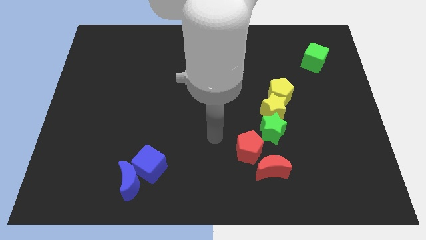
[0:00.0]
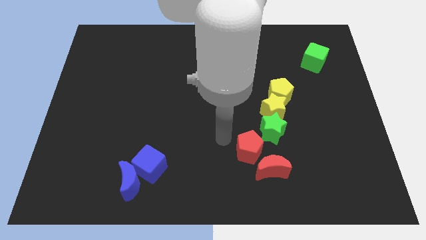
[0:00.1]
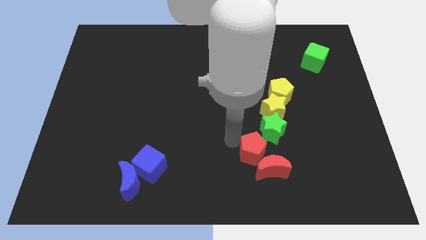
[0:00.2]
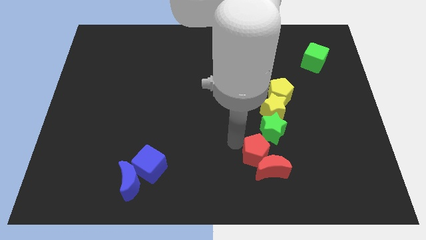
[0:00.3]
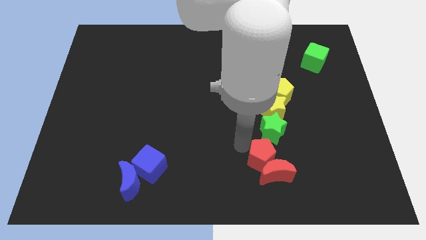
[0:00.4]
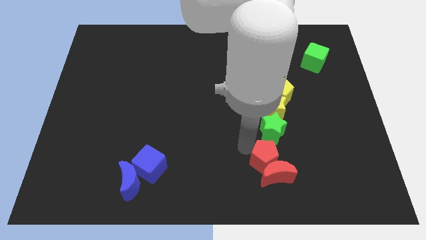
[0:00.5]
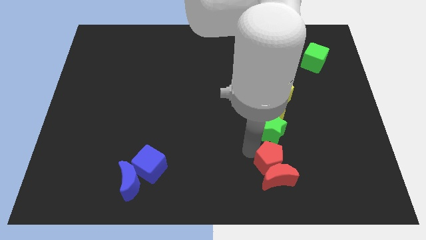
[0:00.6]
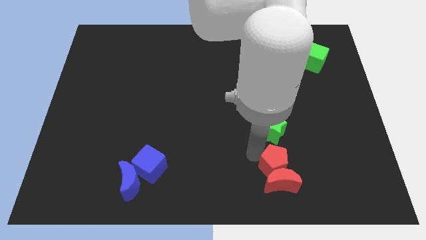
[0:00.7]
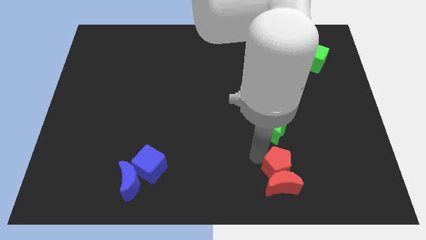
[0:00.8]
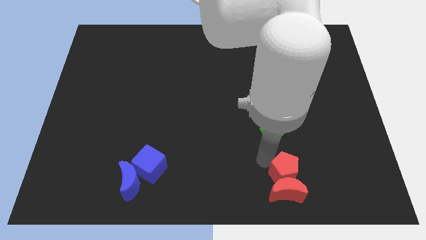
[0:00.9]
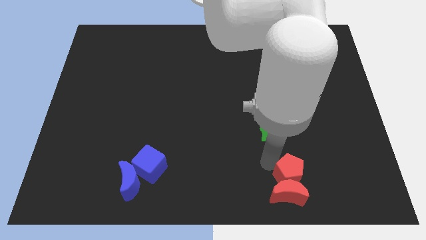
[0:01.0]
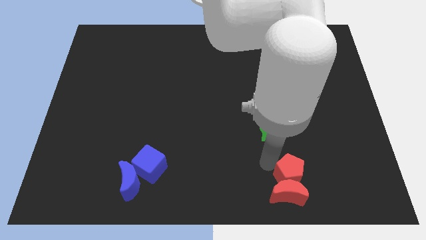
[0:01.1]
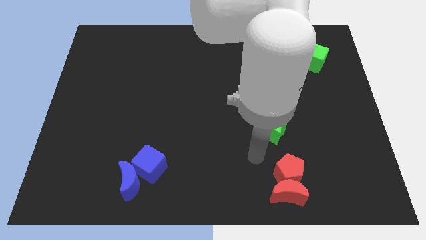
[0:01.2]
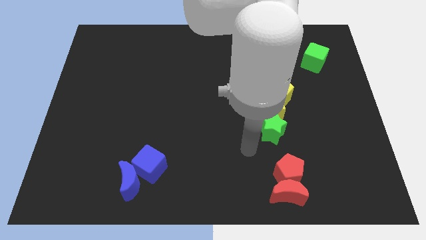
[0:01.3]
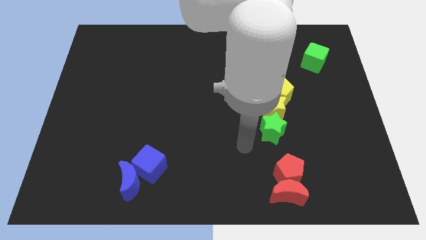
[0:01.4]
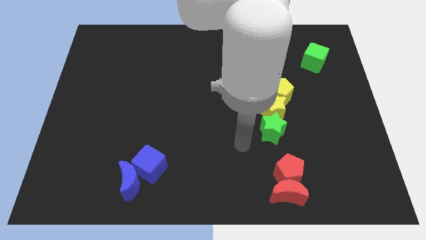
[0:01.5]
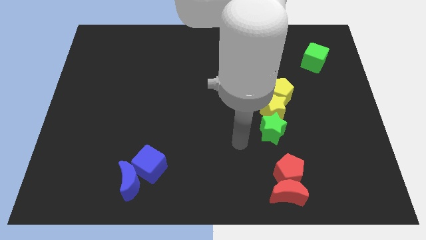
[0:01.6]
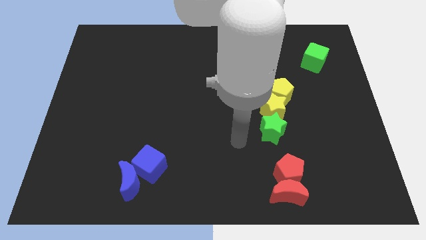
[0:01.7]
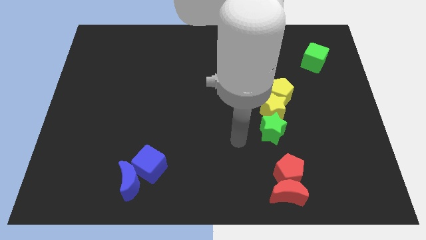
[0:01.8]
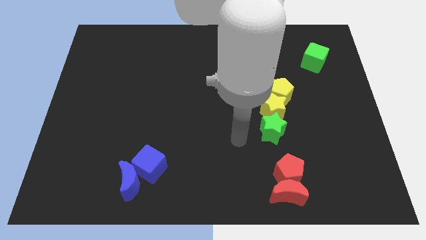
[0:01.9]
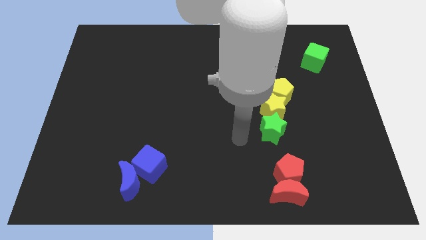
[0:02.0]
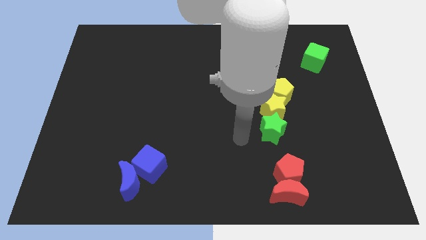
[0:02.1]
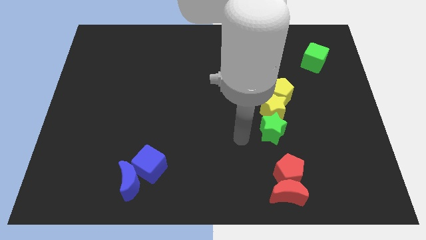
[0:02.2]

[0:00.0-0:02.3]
move the red pentagon along with red crescent to the bottom

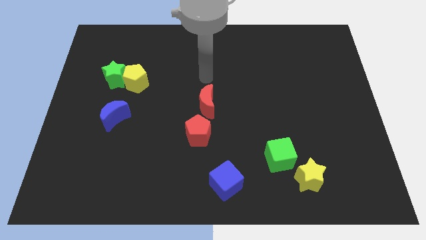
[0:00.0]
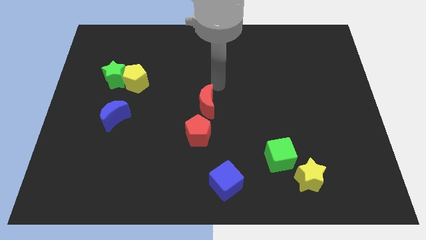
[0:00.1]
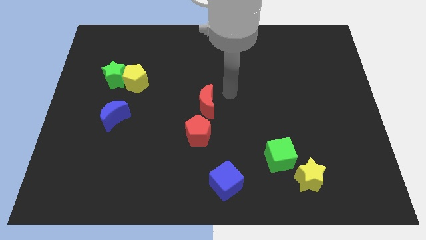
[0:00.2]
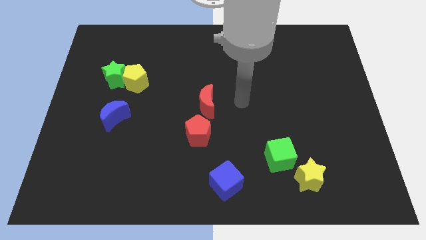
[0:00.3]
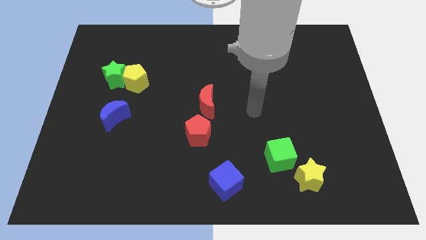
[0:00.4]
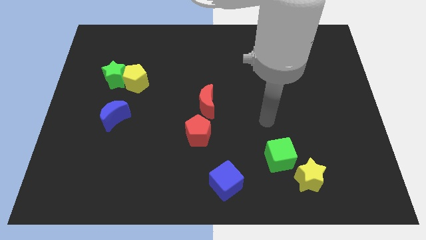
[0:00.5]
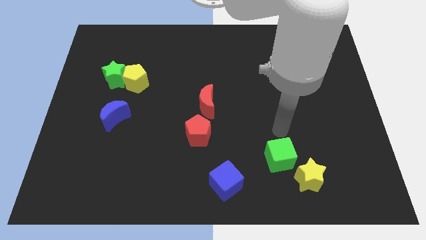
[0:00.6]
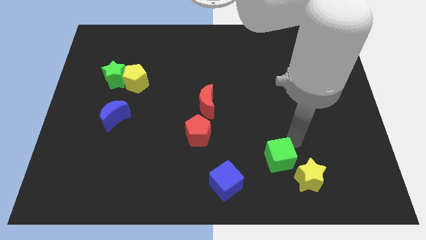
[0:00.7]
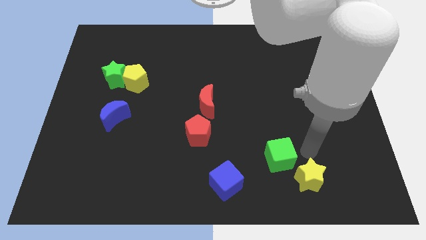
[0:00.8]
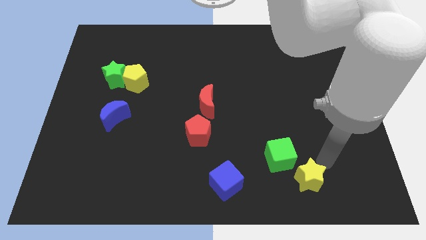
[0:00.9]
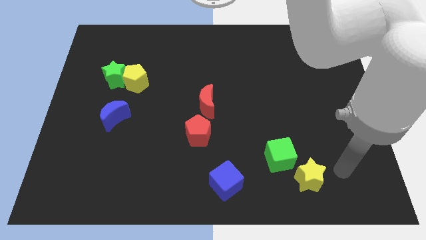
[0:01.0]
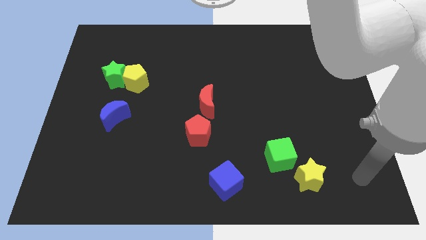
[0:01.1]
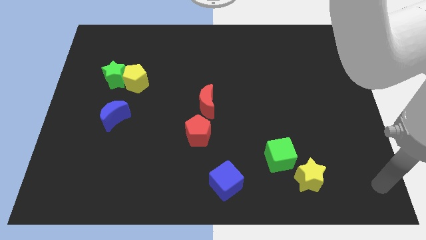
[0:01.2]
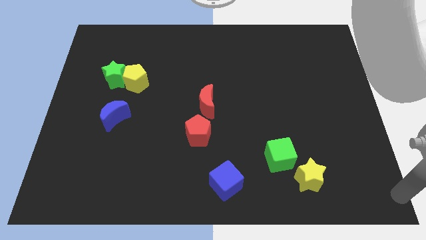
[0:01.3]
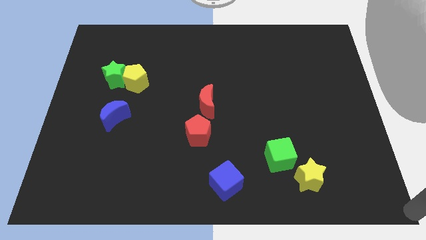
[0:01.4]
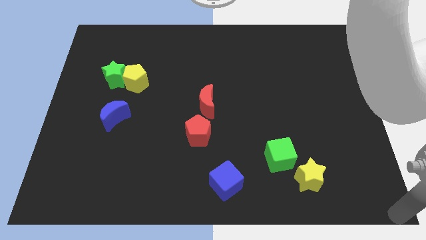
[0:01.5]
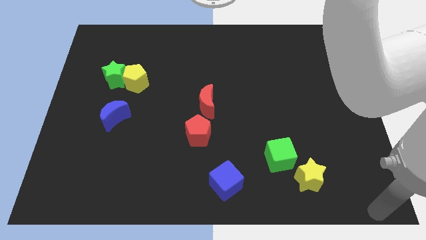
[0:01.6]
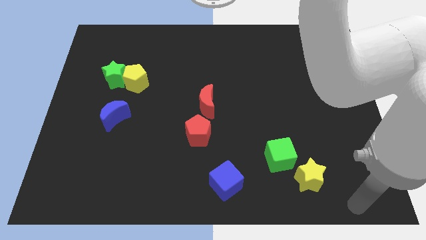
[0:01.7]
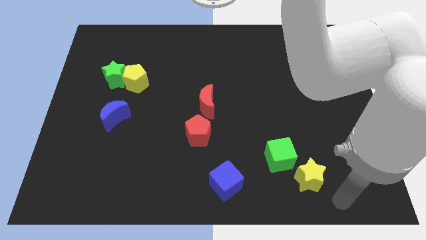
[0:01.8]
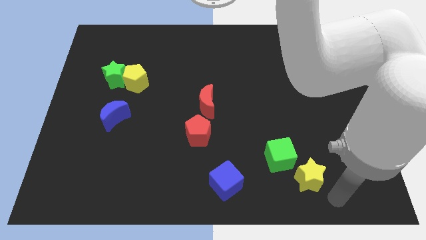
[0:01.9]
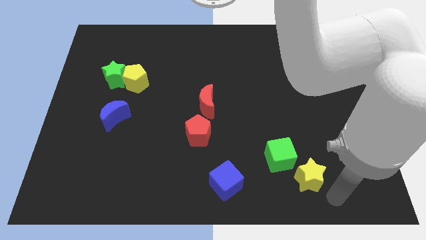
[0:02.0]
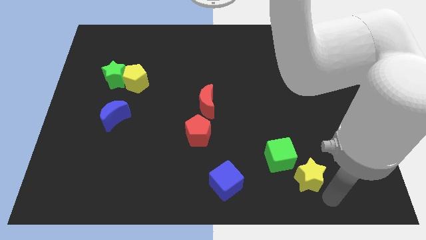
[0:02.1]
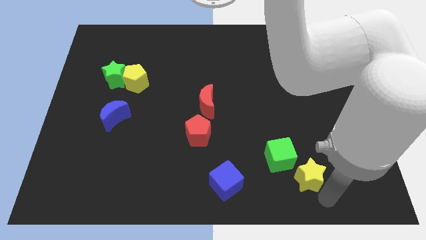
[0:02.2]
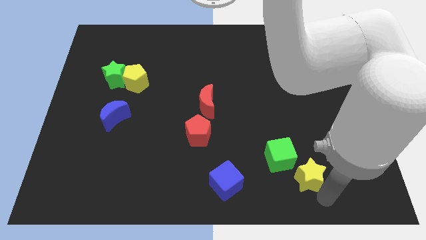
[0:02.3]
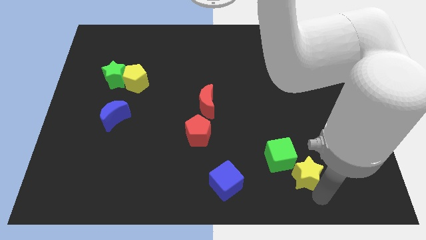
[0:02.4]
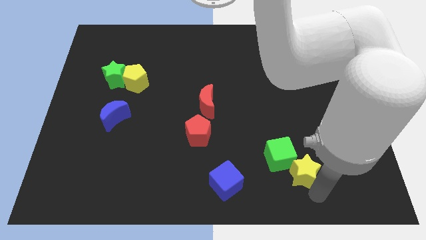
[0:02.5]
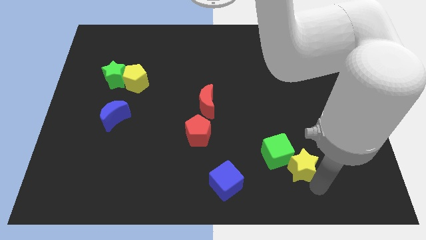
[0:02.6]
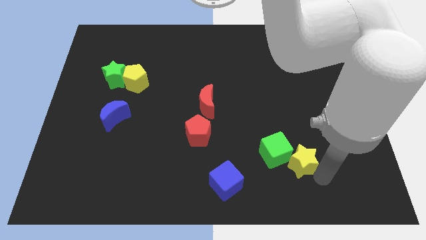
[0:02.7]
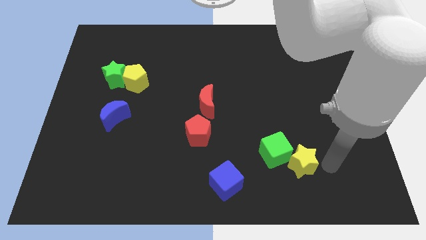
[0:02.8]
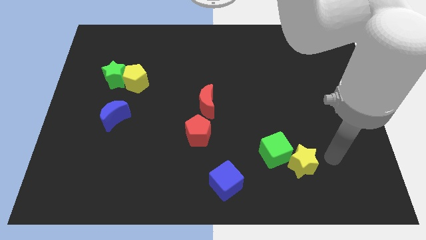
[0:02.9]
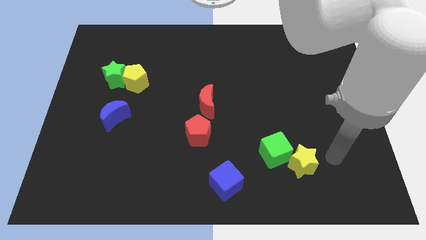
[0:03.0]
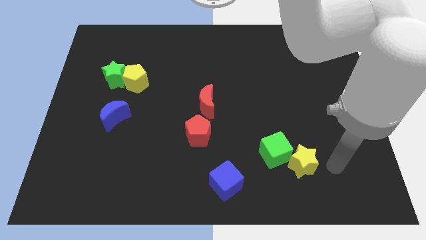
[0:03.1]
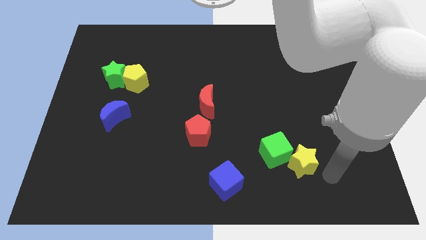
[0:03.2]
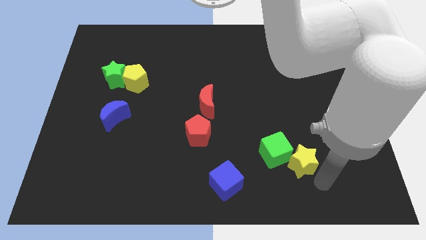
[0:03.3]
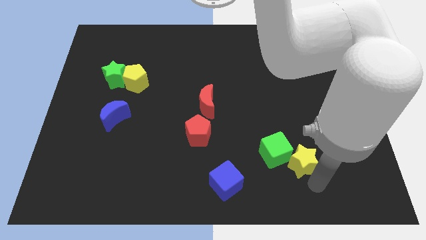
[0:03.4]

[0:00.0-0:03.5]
push the yellow star into the green cube

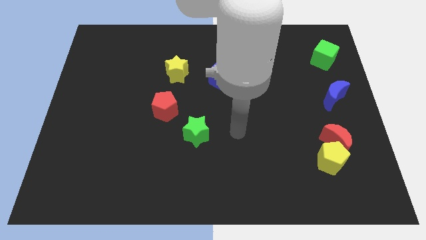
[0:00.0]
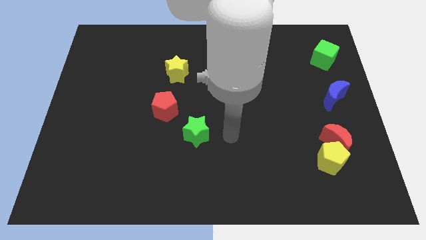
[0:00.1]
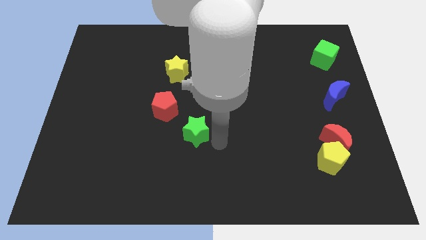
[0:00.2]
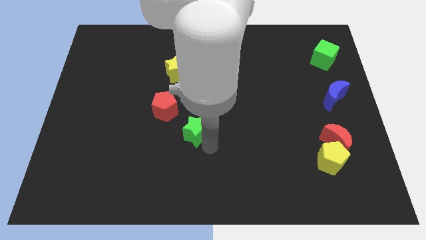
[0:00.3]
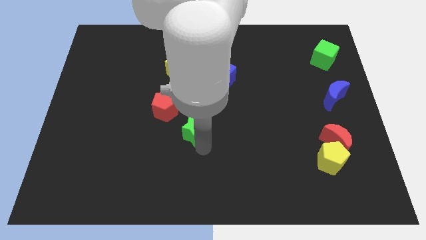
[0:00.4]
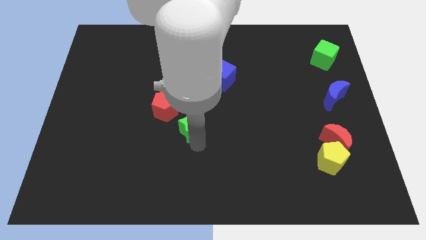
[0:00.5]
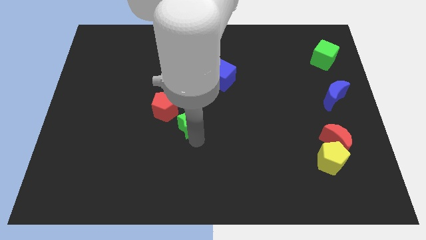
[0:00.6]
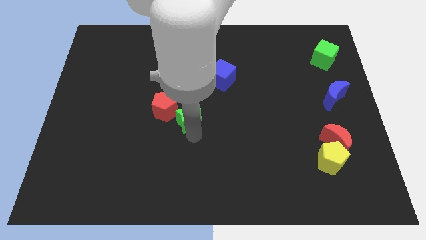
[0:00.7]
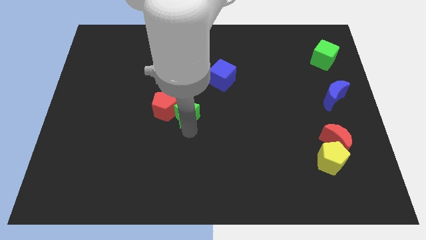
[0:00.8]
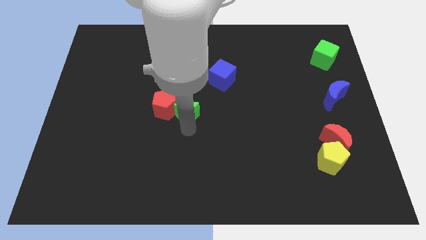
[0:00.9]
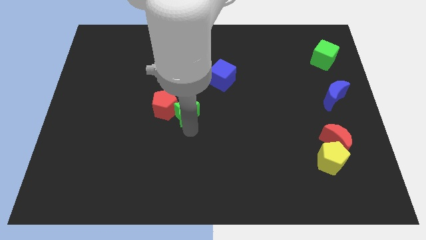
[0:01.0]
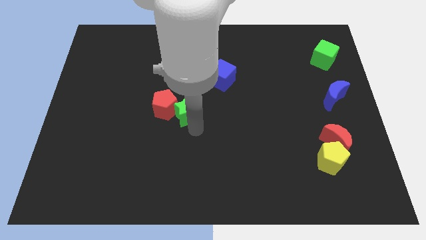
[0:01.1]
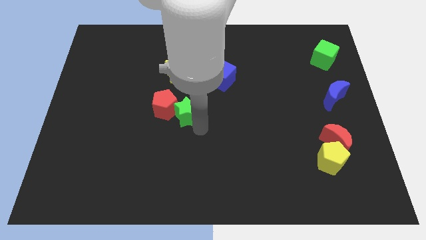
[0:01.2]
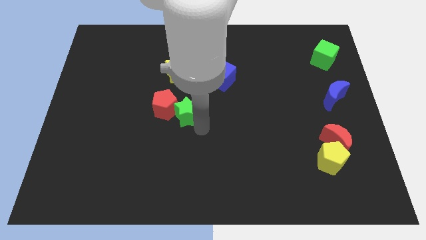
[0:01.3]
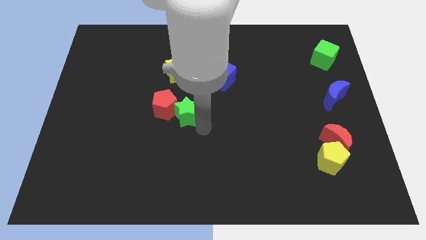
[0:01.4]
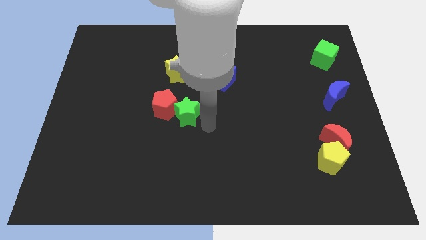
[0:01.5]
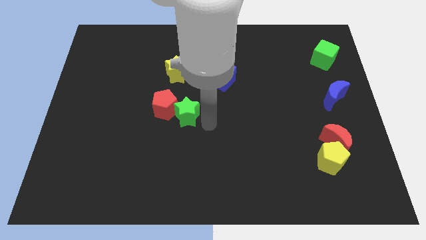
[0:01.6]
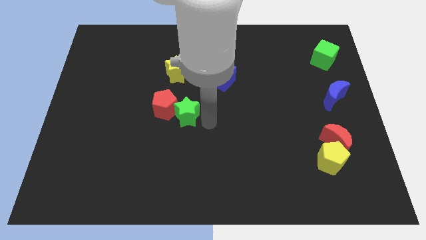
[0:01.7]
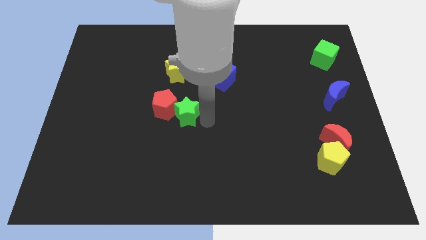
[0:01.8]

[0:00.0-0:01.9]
push the green star into red pentagon to the right

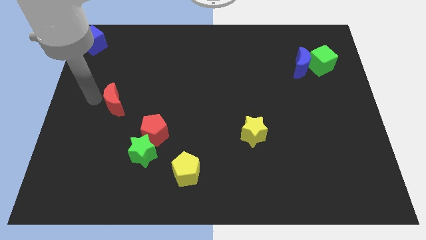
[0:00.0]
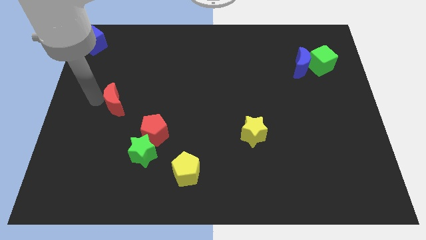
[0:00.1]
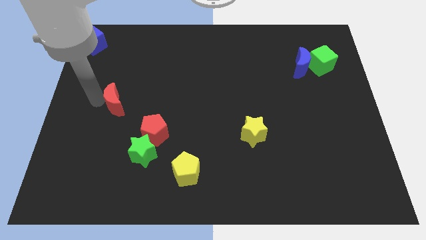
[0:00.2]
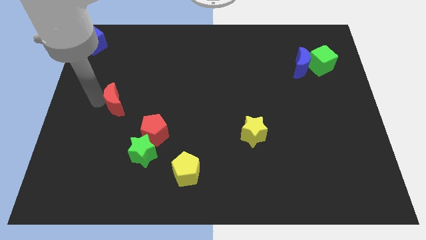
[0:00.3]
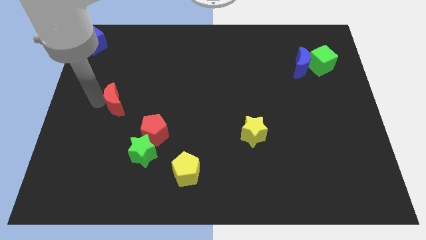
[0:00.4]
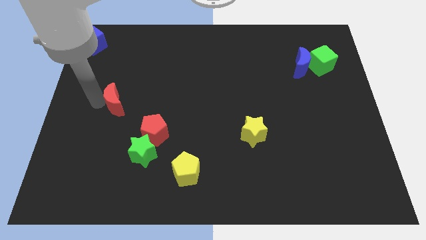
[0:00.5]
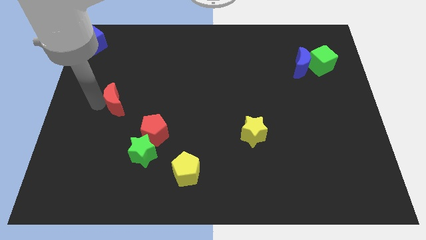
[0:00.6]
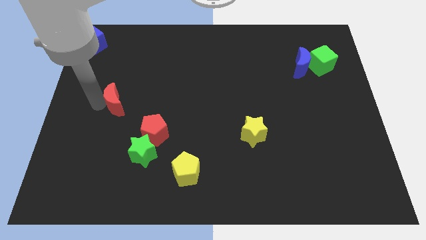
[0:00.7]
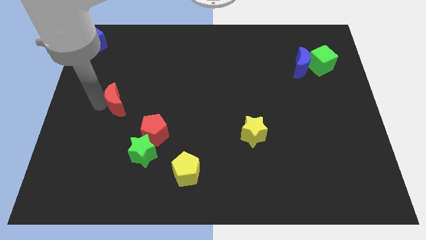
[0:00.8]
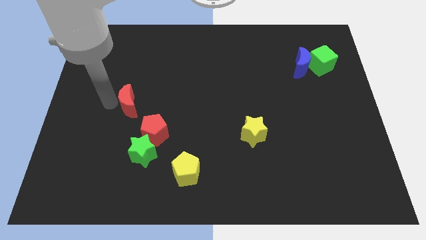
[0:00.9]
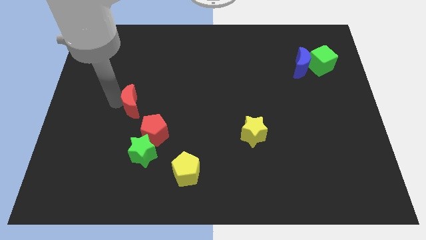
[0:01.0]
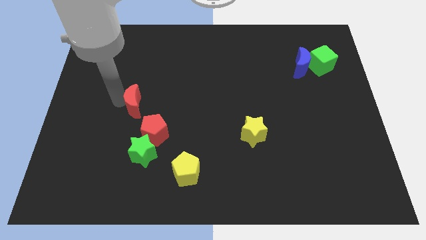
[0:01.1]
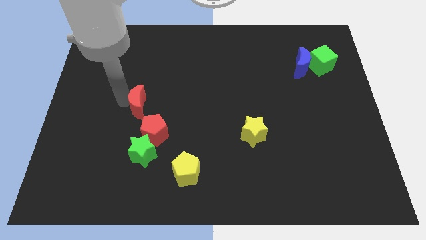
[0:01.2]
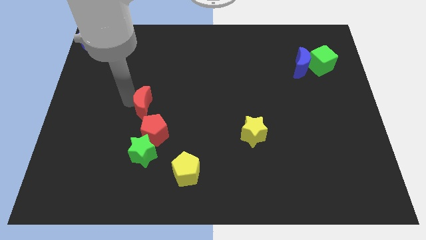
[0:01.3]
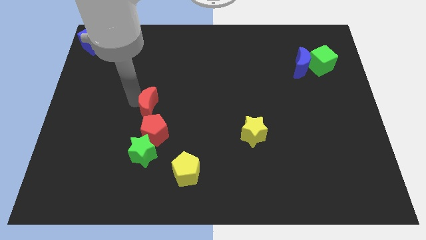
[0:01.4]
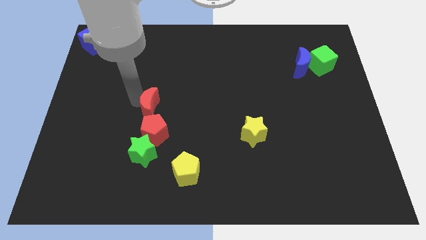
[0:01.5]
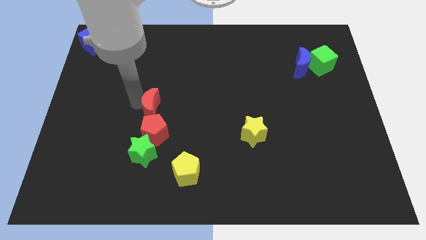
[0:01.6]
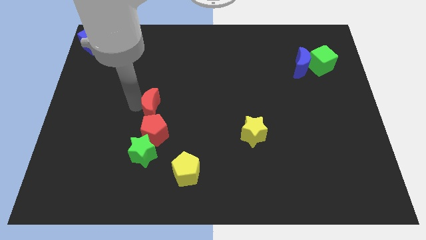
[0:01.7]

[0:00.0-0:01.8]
place the red crescent above the red pentagon
